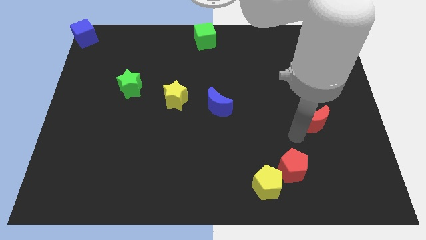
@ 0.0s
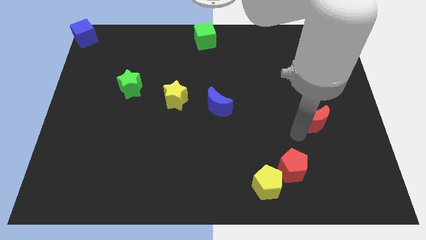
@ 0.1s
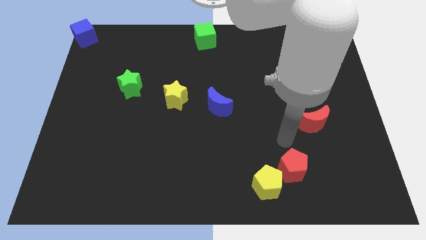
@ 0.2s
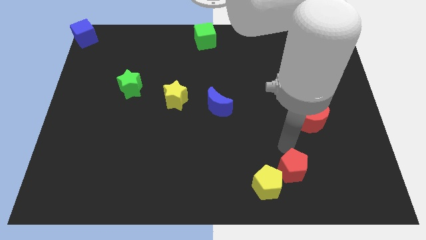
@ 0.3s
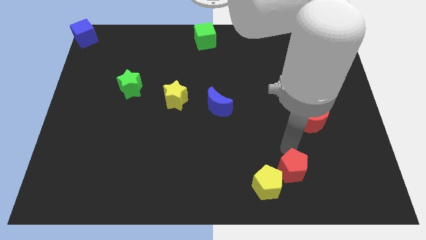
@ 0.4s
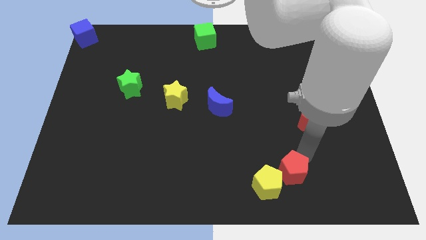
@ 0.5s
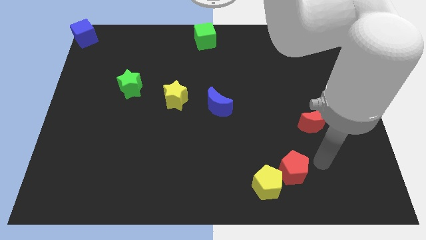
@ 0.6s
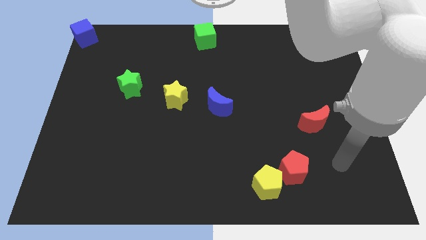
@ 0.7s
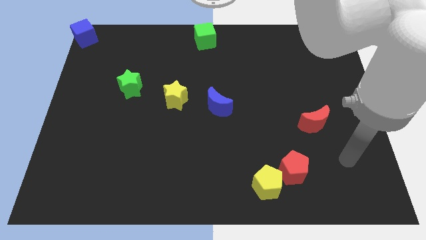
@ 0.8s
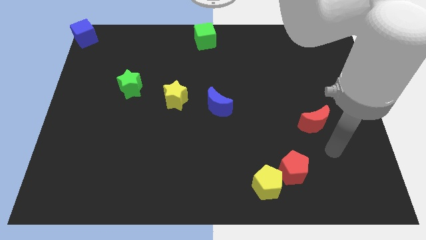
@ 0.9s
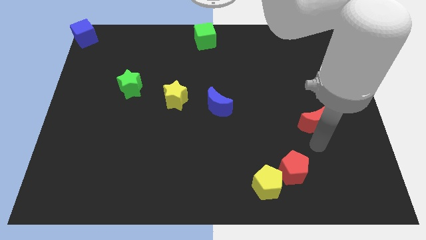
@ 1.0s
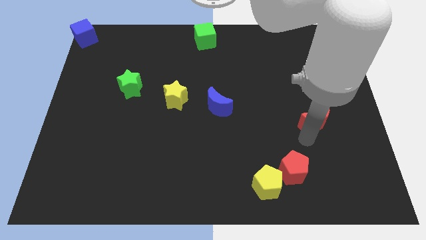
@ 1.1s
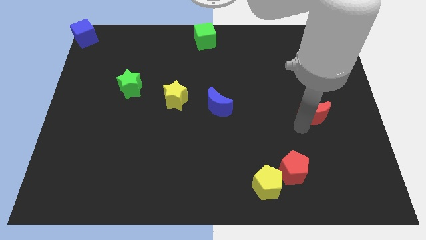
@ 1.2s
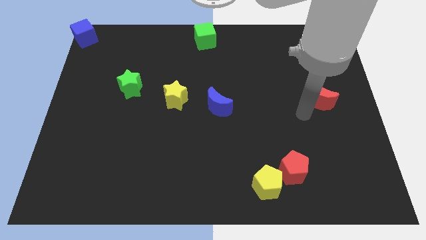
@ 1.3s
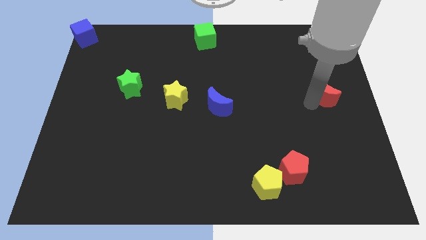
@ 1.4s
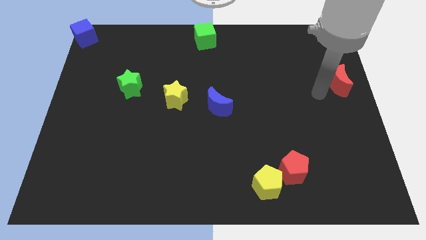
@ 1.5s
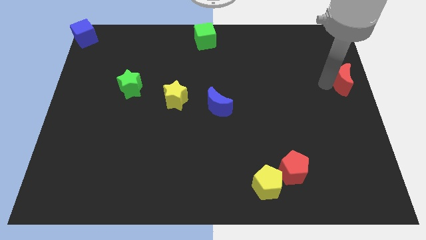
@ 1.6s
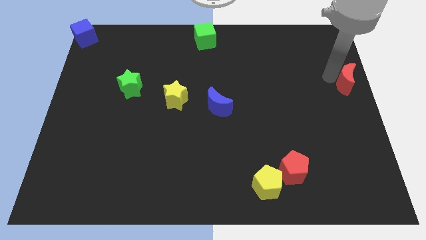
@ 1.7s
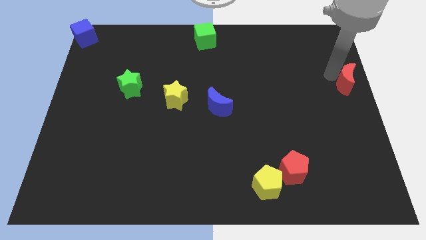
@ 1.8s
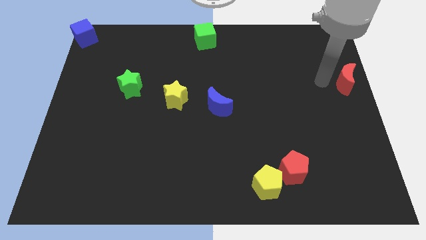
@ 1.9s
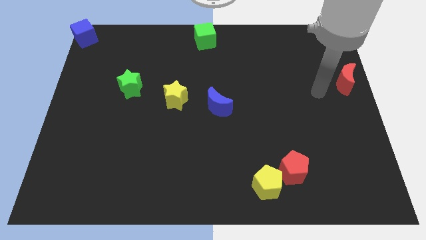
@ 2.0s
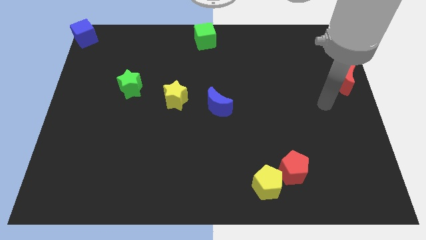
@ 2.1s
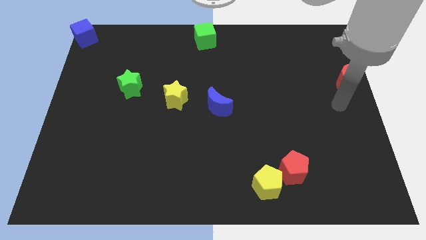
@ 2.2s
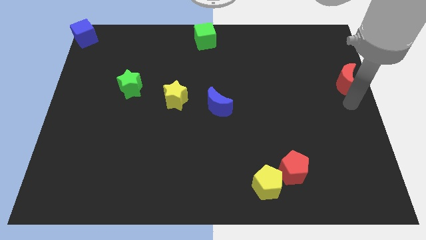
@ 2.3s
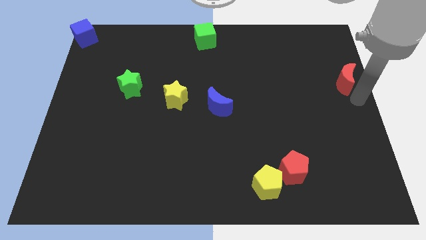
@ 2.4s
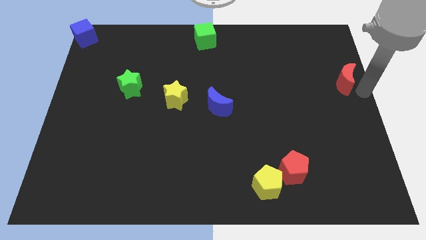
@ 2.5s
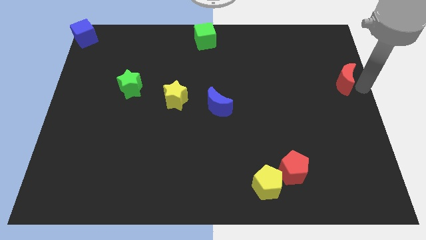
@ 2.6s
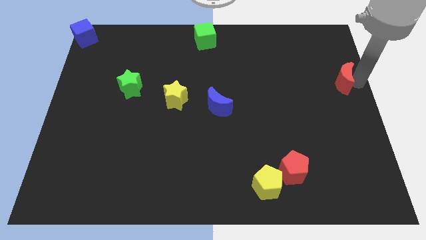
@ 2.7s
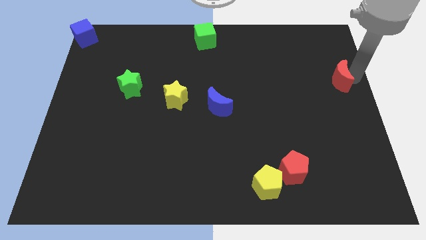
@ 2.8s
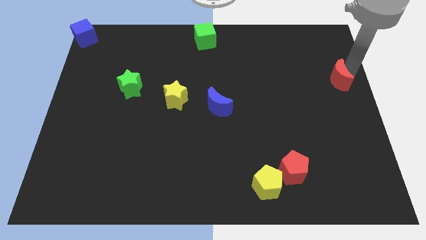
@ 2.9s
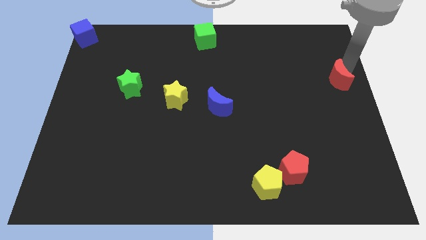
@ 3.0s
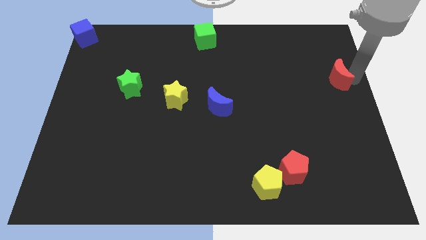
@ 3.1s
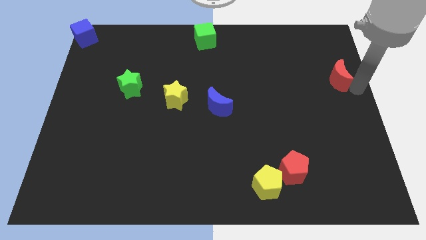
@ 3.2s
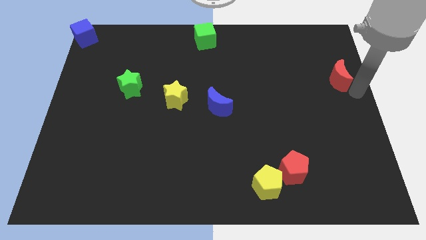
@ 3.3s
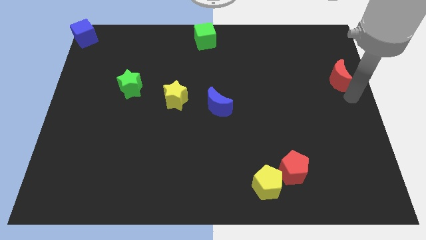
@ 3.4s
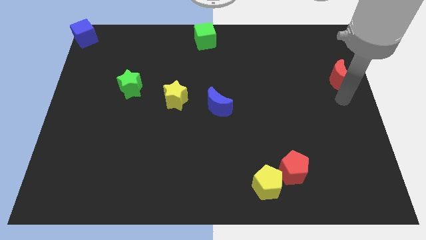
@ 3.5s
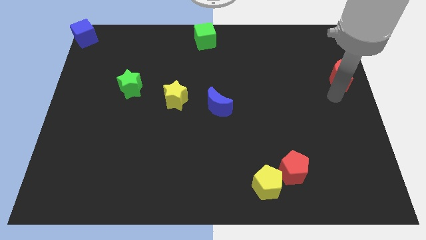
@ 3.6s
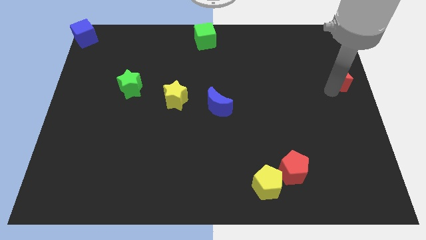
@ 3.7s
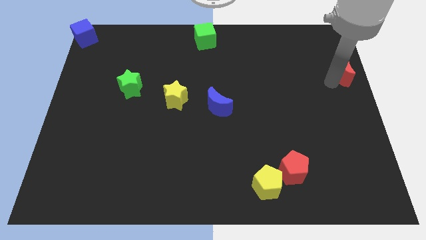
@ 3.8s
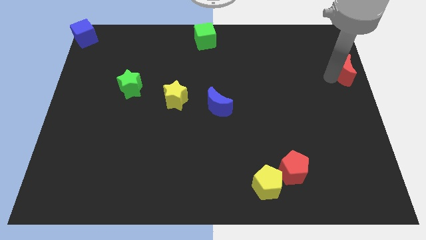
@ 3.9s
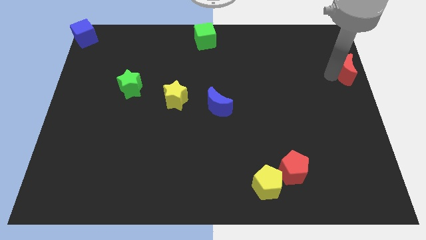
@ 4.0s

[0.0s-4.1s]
place the red moon to the center right of the board

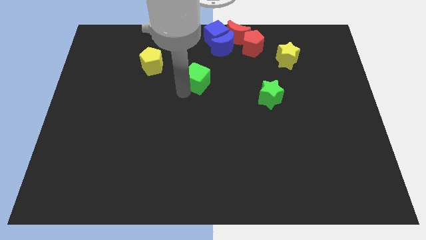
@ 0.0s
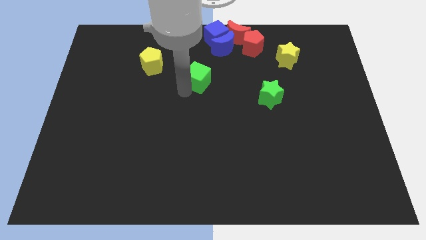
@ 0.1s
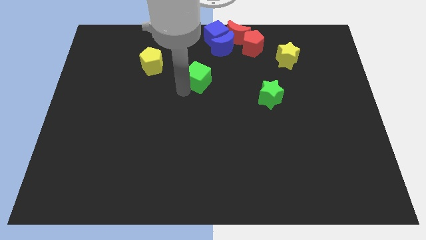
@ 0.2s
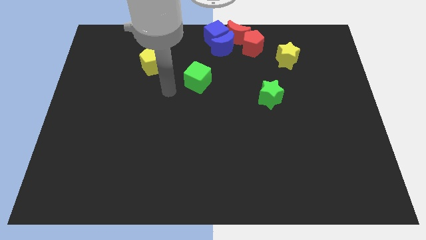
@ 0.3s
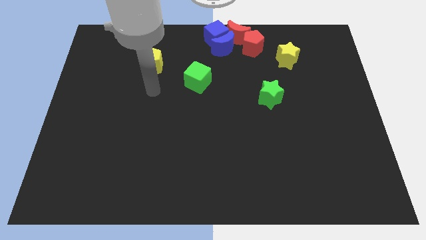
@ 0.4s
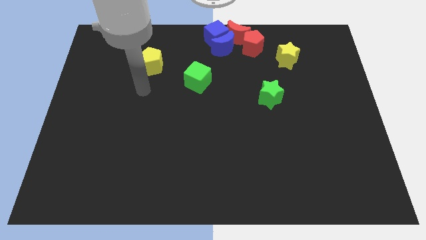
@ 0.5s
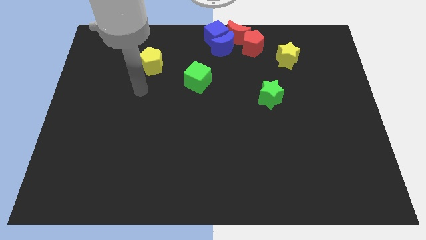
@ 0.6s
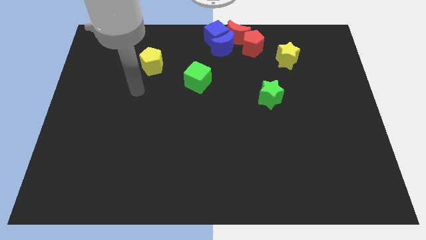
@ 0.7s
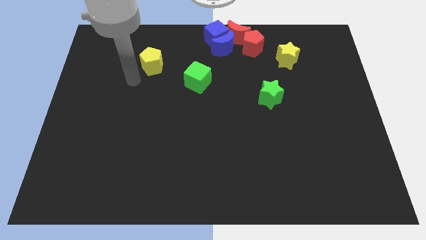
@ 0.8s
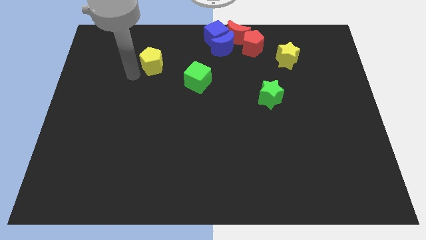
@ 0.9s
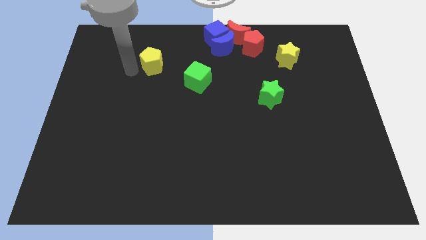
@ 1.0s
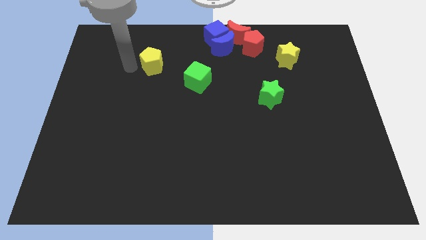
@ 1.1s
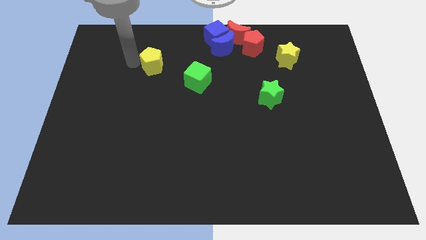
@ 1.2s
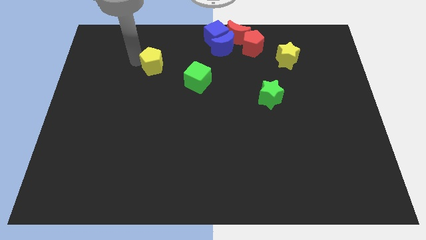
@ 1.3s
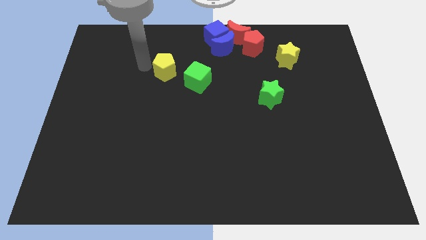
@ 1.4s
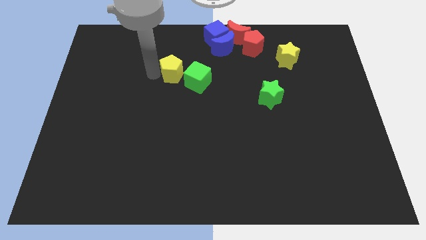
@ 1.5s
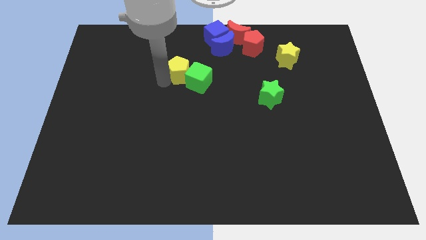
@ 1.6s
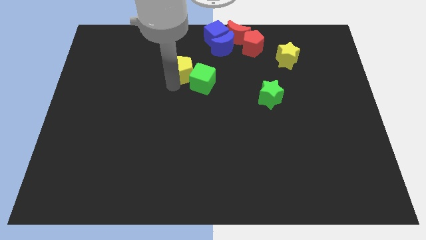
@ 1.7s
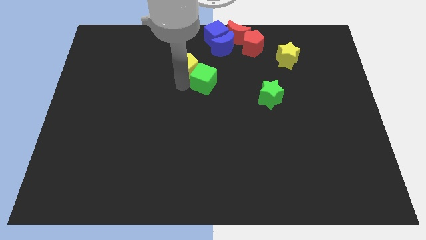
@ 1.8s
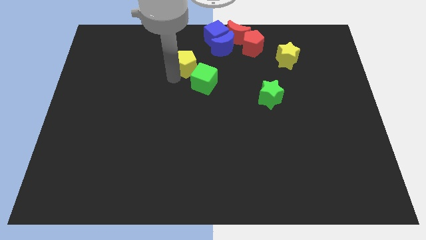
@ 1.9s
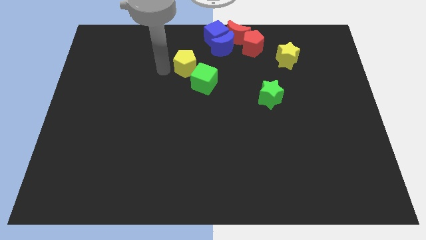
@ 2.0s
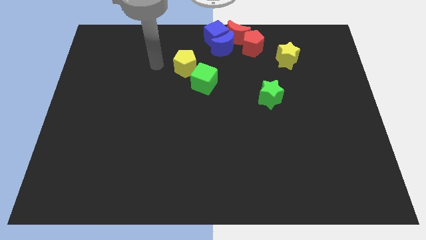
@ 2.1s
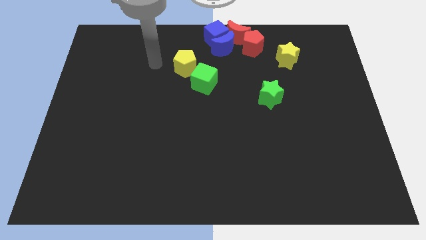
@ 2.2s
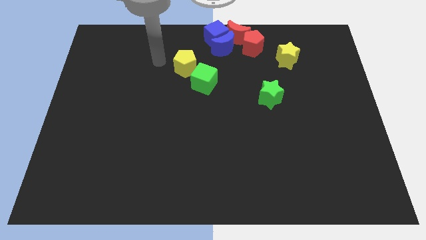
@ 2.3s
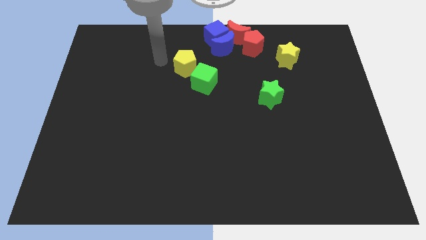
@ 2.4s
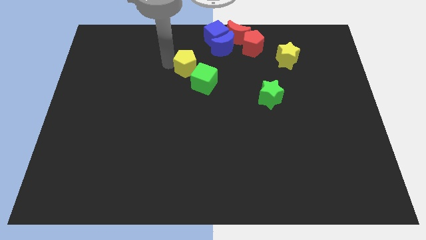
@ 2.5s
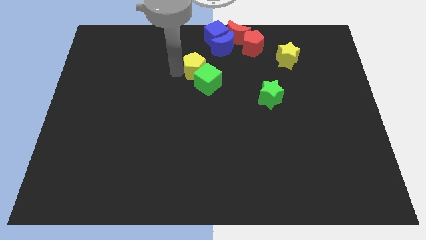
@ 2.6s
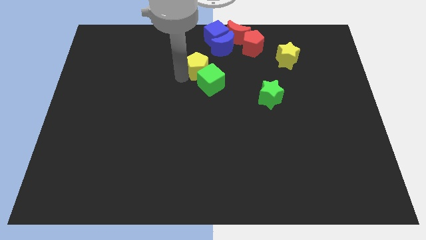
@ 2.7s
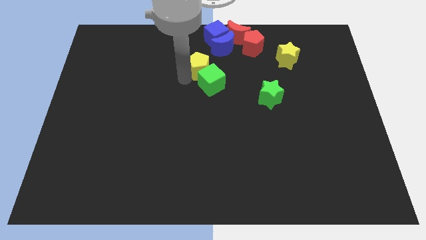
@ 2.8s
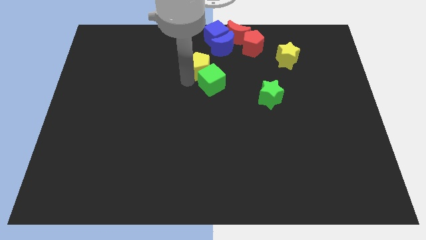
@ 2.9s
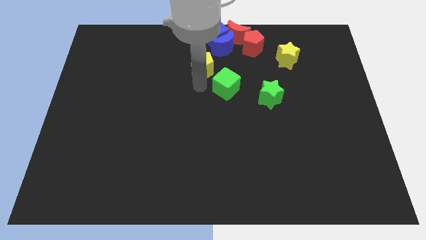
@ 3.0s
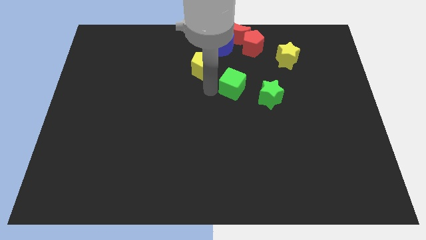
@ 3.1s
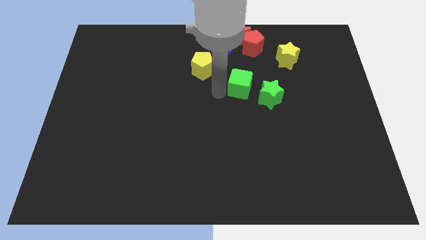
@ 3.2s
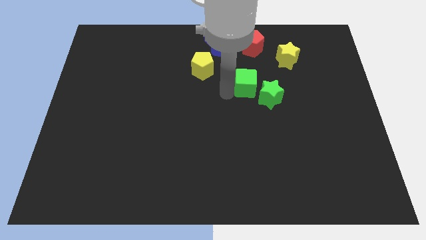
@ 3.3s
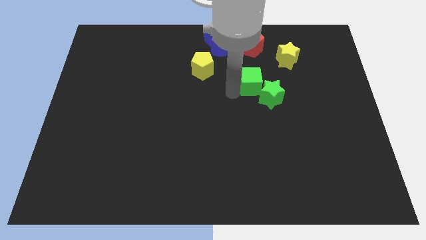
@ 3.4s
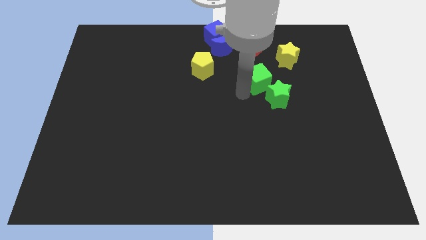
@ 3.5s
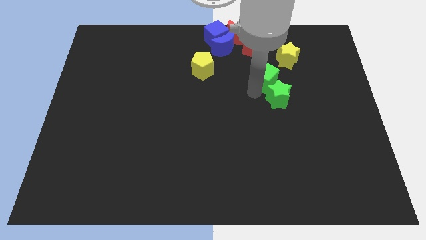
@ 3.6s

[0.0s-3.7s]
push the green cube into the green star

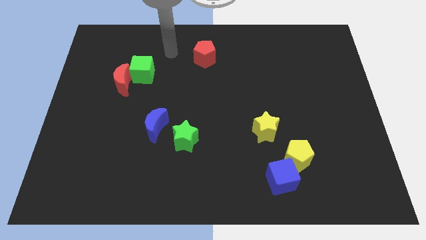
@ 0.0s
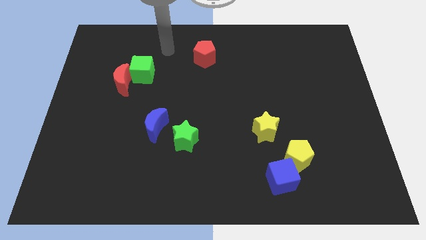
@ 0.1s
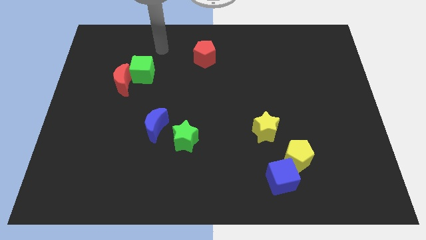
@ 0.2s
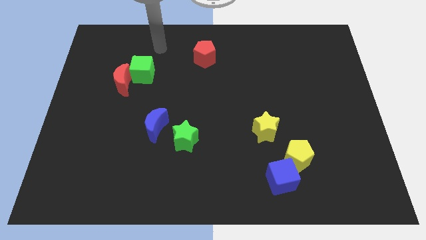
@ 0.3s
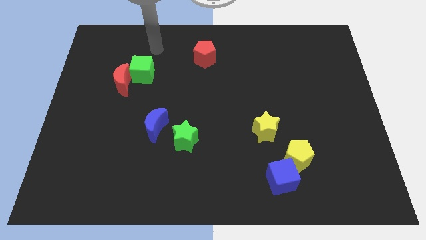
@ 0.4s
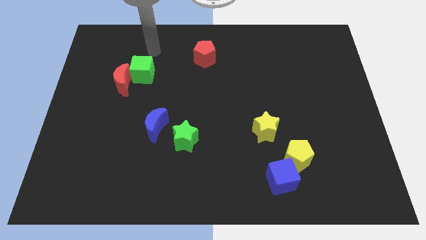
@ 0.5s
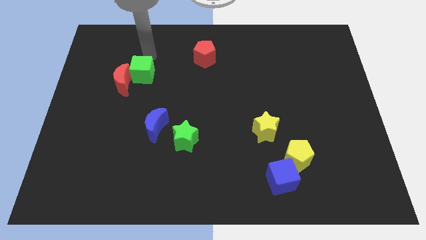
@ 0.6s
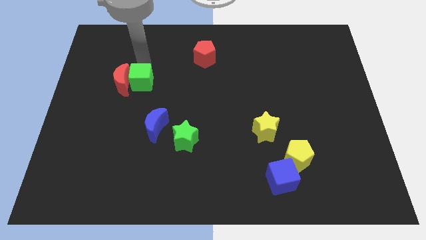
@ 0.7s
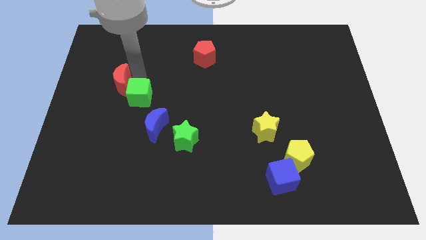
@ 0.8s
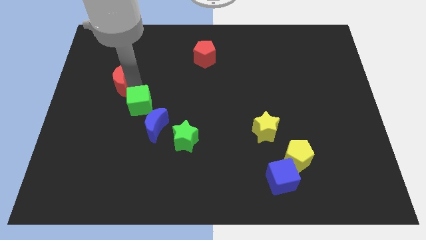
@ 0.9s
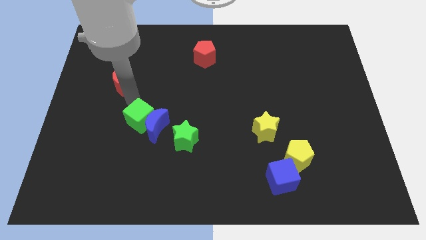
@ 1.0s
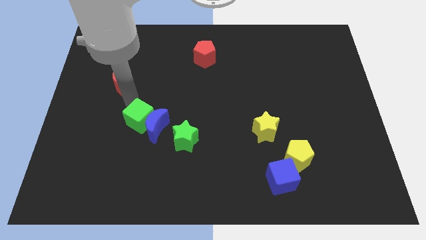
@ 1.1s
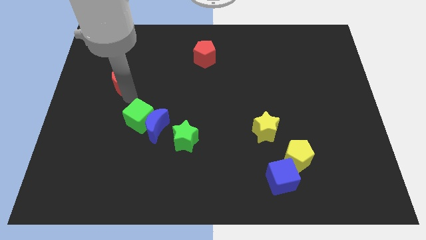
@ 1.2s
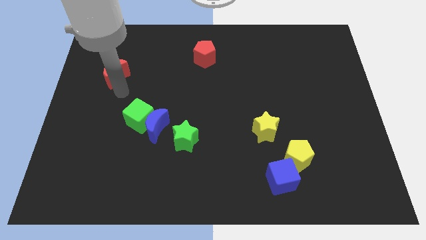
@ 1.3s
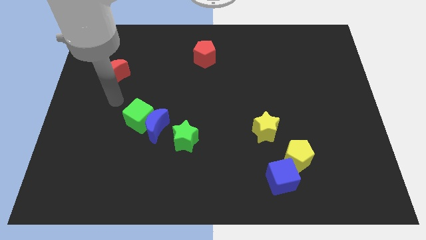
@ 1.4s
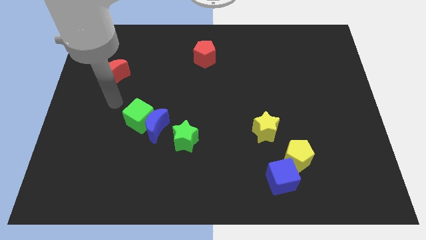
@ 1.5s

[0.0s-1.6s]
move the green cube into the blue crescent
